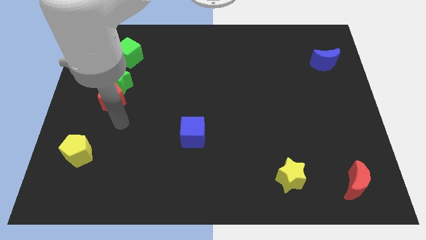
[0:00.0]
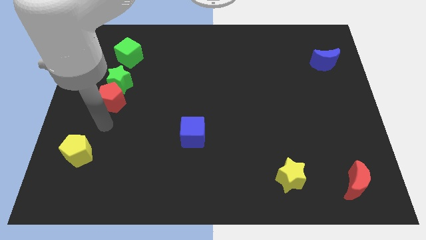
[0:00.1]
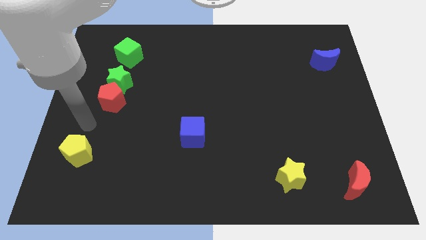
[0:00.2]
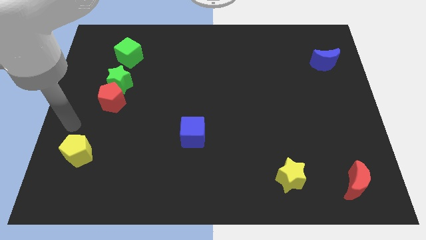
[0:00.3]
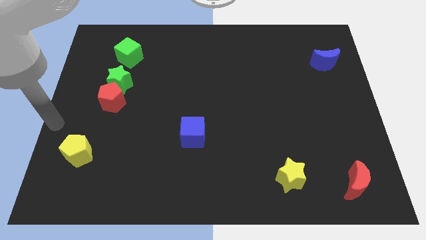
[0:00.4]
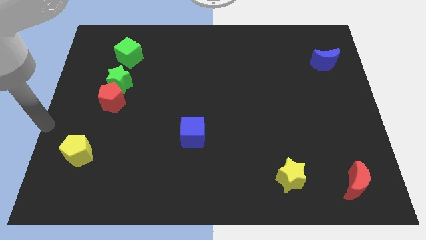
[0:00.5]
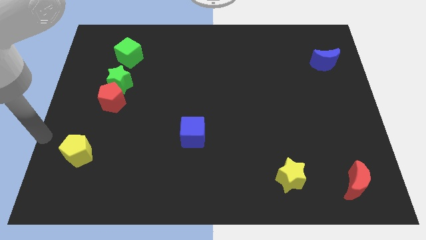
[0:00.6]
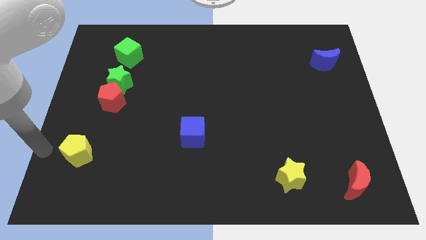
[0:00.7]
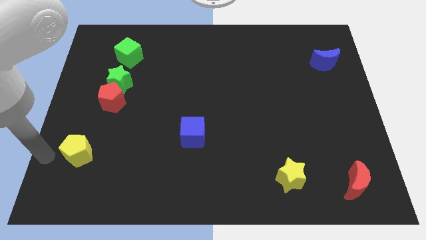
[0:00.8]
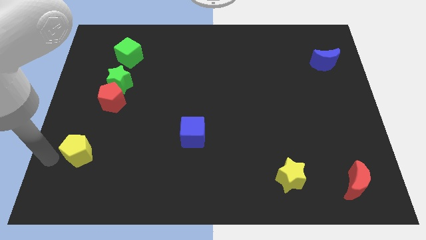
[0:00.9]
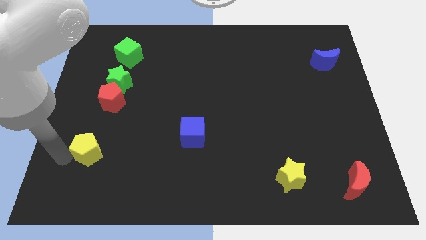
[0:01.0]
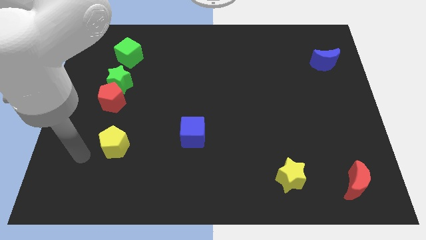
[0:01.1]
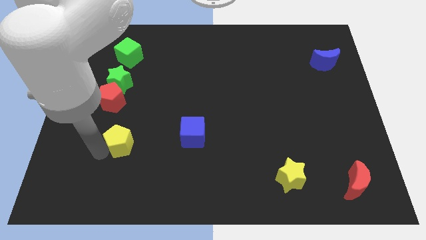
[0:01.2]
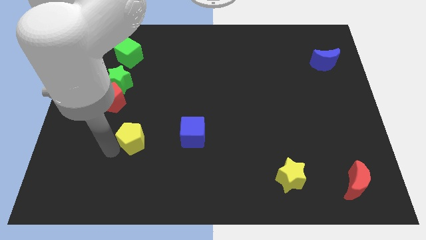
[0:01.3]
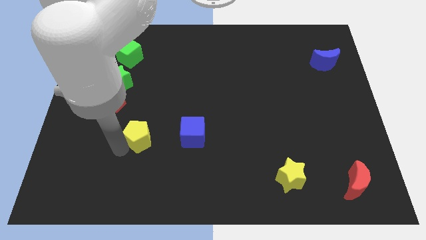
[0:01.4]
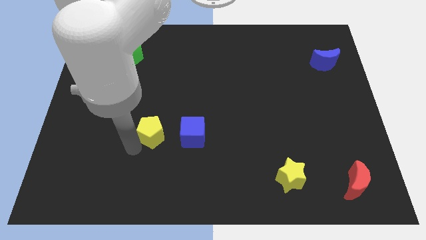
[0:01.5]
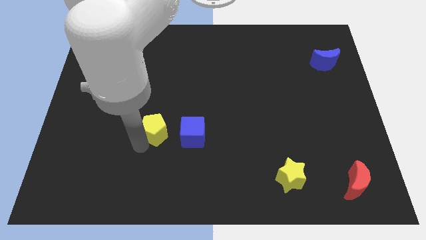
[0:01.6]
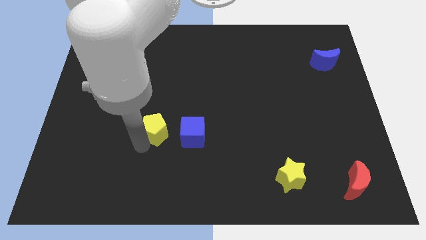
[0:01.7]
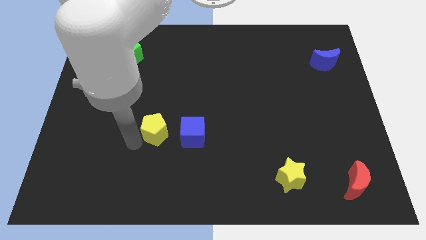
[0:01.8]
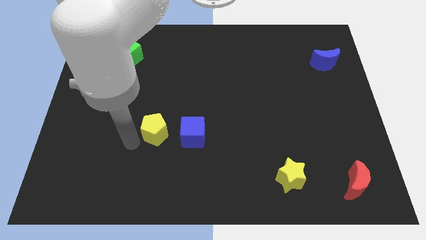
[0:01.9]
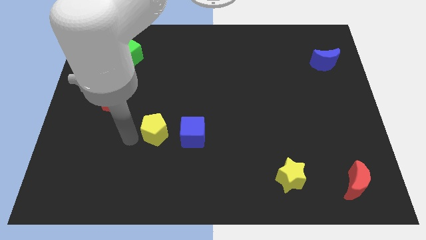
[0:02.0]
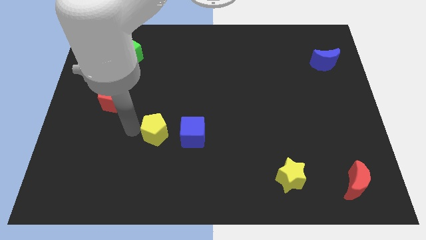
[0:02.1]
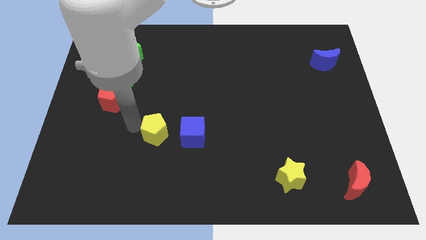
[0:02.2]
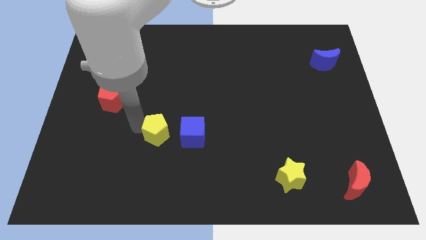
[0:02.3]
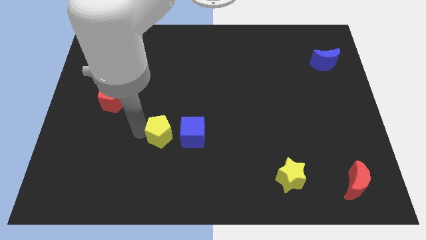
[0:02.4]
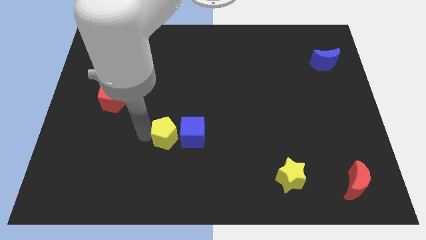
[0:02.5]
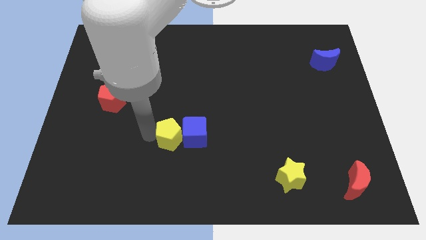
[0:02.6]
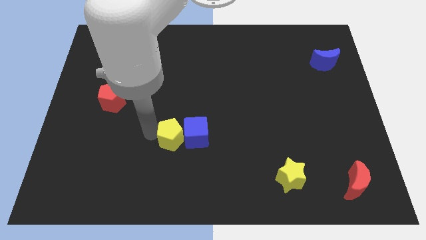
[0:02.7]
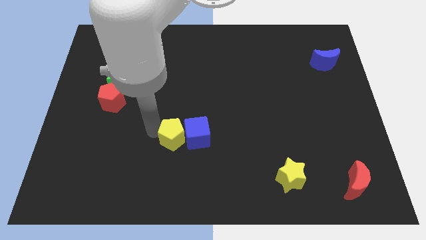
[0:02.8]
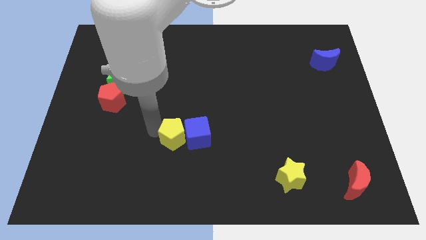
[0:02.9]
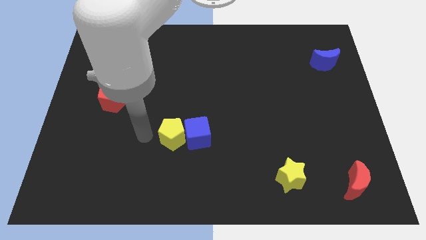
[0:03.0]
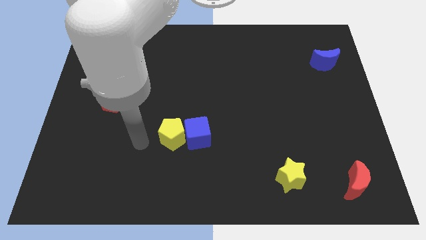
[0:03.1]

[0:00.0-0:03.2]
move the yellow pentagon to the left of the blue cube

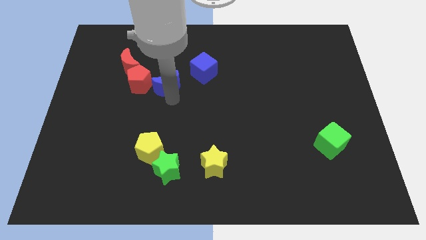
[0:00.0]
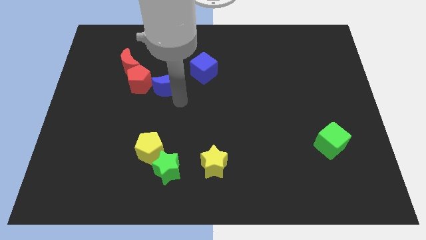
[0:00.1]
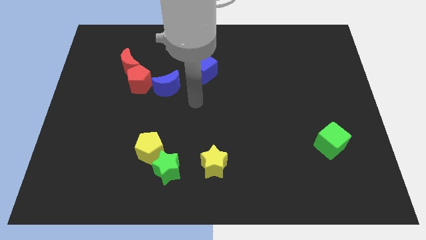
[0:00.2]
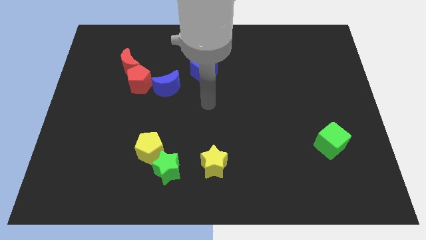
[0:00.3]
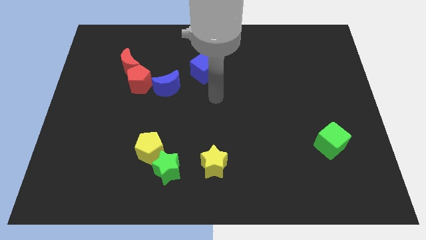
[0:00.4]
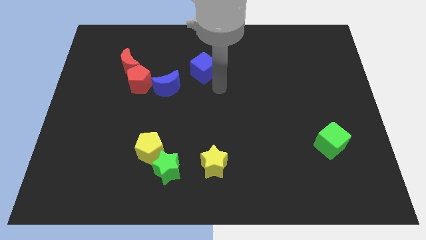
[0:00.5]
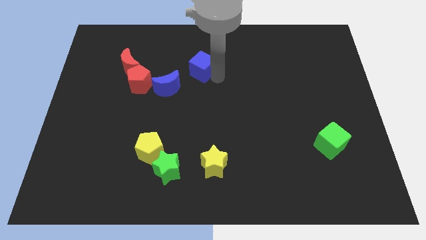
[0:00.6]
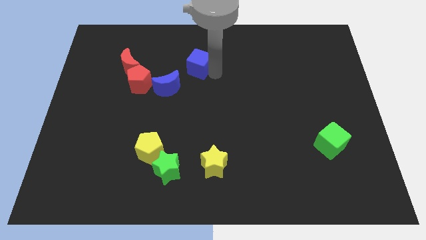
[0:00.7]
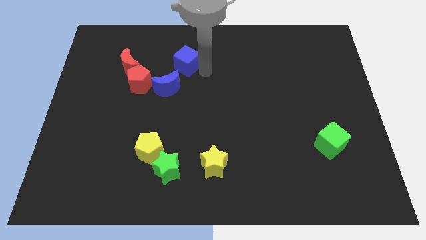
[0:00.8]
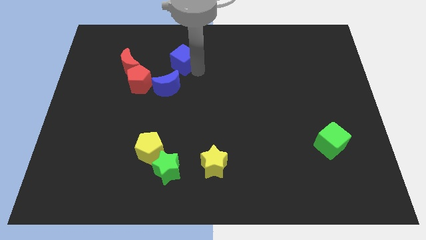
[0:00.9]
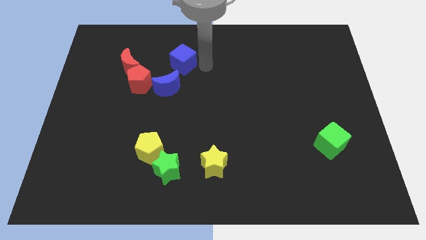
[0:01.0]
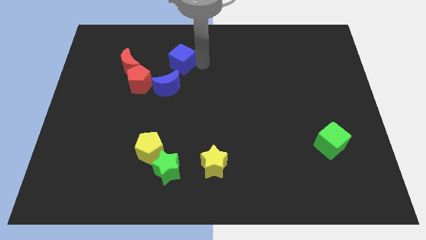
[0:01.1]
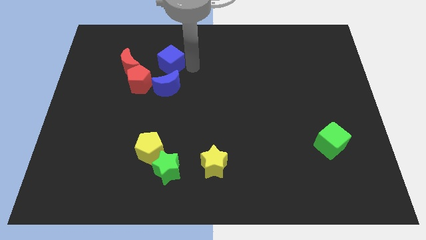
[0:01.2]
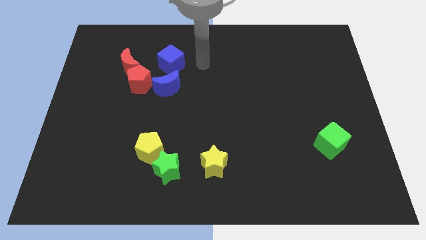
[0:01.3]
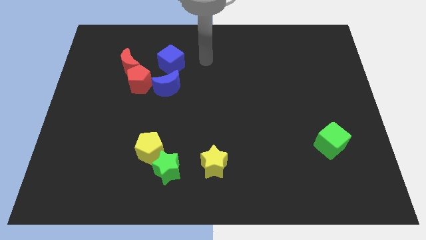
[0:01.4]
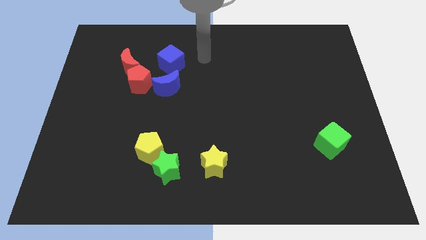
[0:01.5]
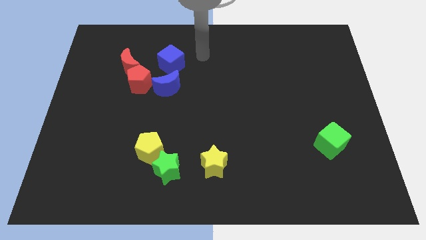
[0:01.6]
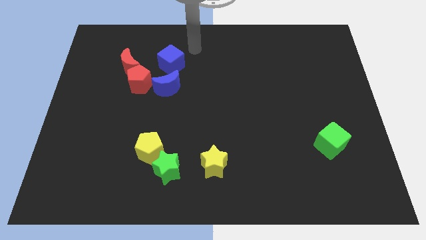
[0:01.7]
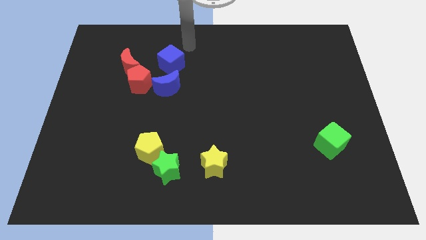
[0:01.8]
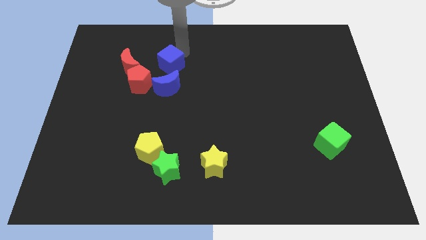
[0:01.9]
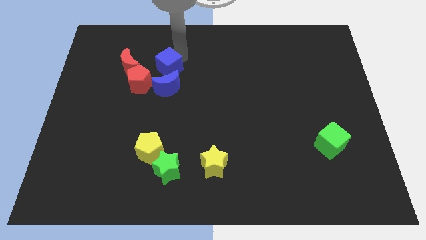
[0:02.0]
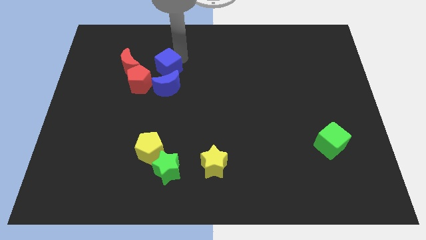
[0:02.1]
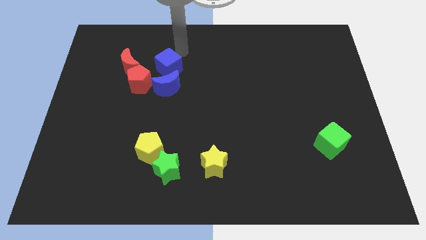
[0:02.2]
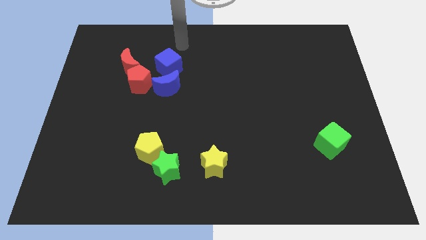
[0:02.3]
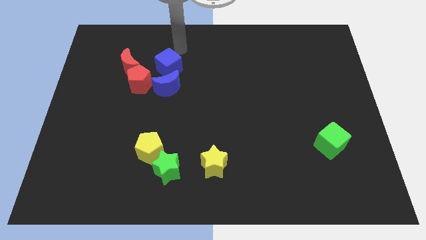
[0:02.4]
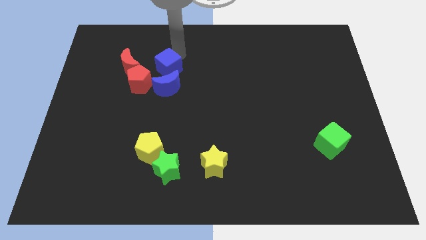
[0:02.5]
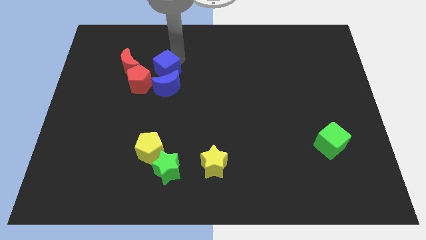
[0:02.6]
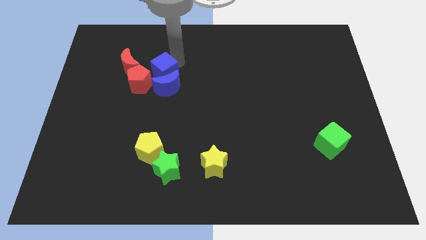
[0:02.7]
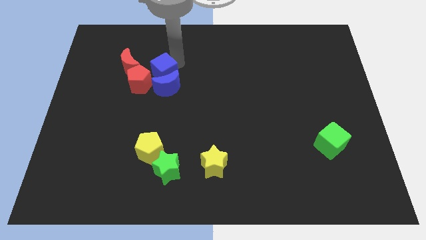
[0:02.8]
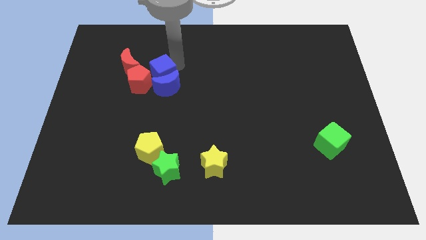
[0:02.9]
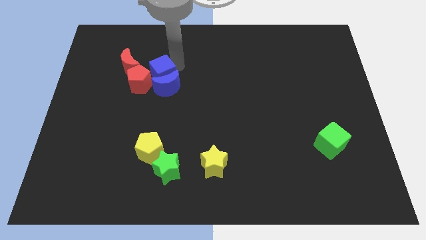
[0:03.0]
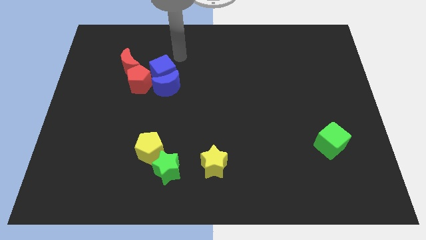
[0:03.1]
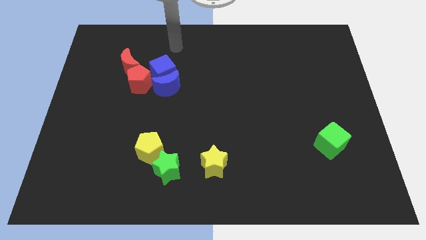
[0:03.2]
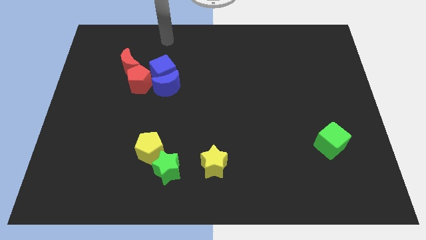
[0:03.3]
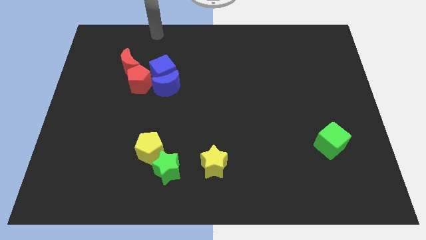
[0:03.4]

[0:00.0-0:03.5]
place the blue cube above the blue crescent

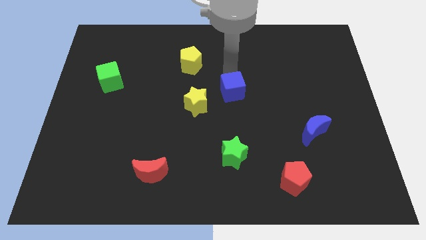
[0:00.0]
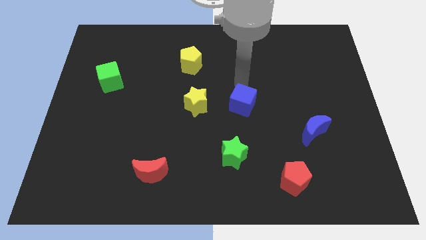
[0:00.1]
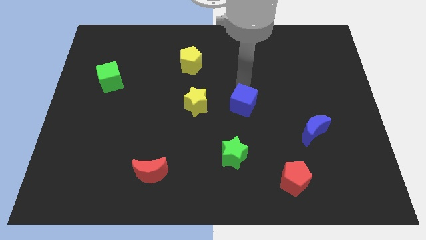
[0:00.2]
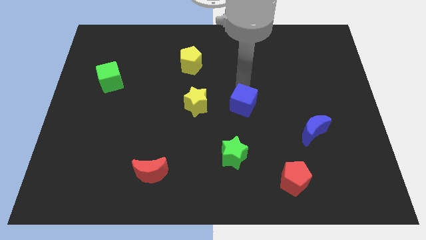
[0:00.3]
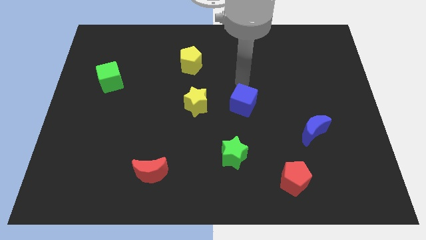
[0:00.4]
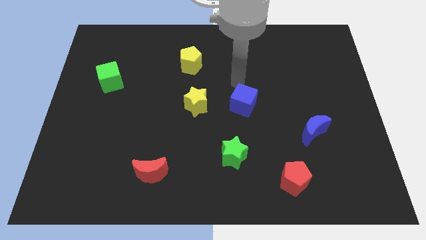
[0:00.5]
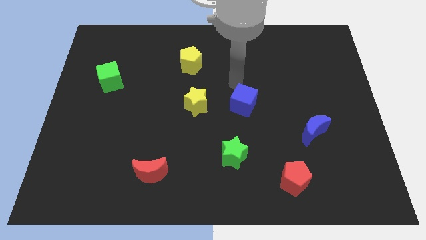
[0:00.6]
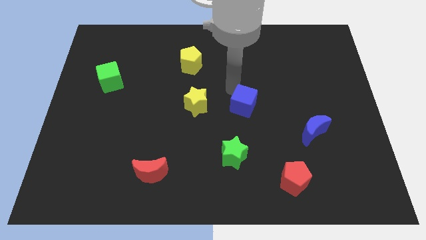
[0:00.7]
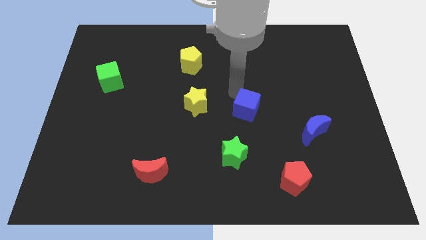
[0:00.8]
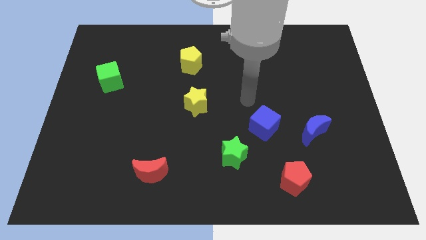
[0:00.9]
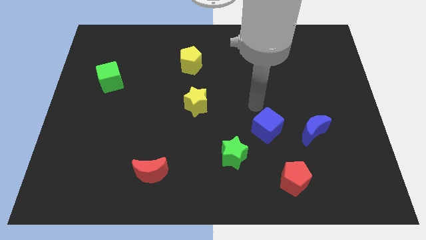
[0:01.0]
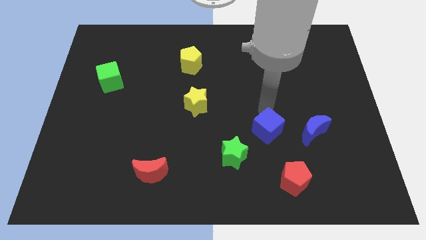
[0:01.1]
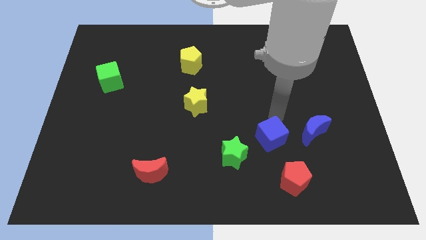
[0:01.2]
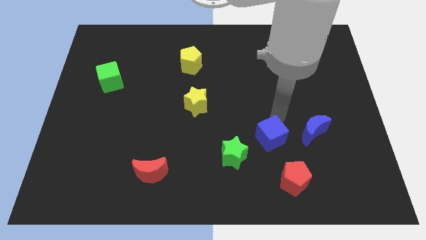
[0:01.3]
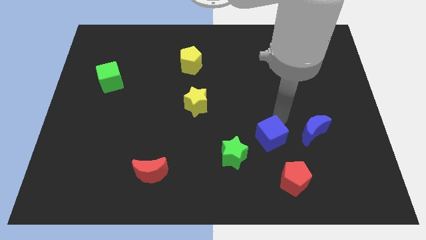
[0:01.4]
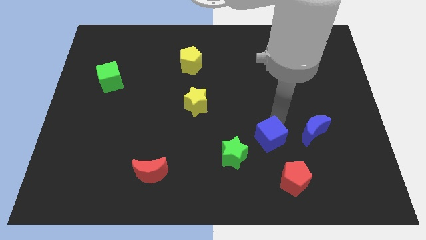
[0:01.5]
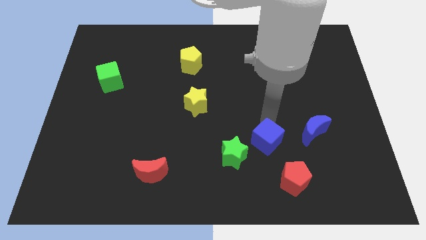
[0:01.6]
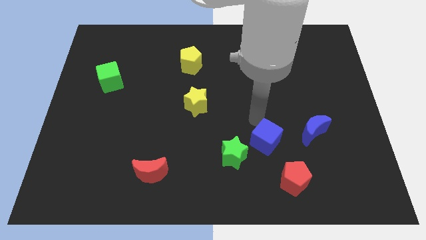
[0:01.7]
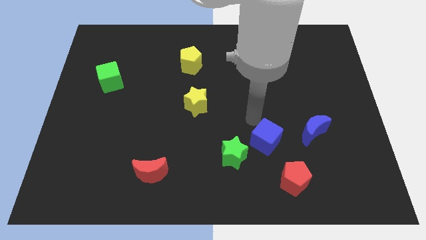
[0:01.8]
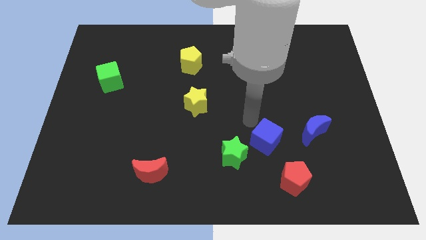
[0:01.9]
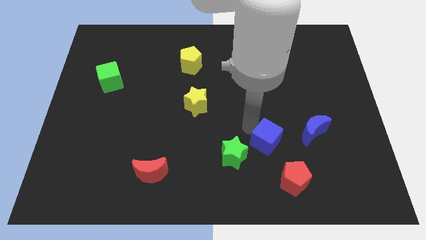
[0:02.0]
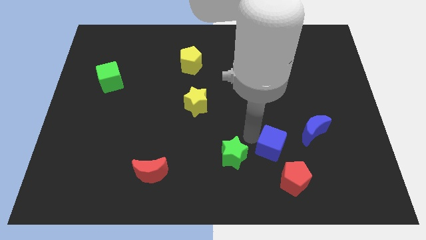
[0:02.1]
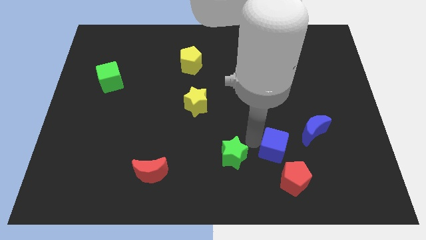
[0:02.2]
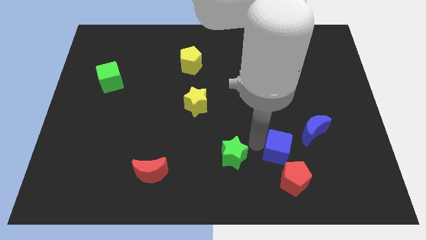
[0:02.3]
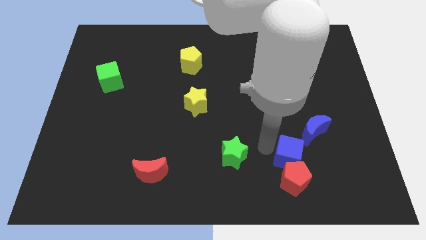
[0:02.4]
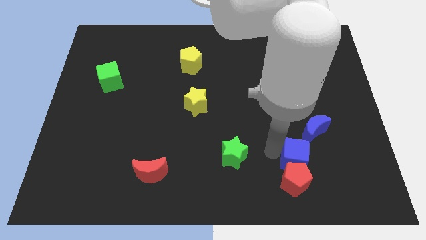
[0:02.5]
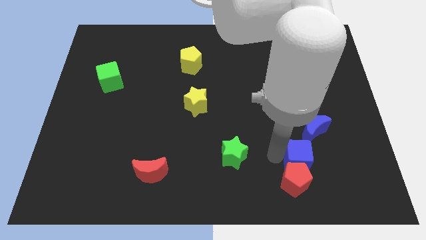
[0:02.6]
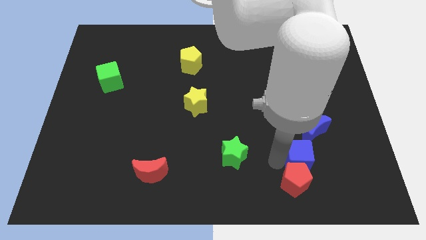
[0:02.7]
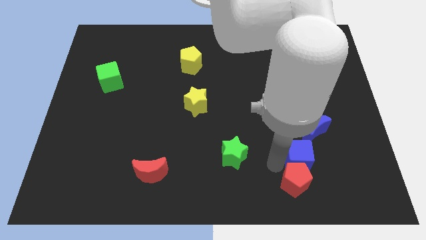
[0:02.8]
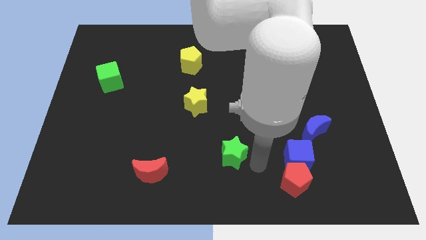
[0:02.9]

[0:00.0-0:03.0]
put the blue cube in between the red pentagon and the blue moon
